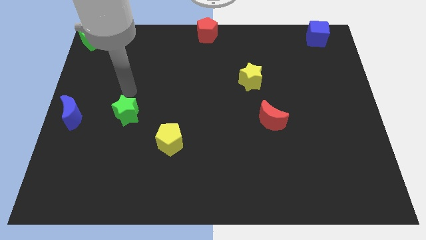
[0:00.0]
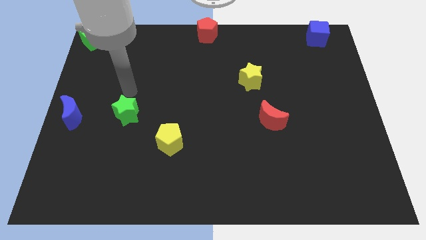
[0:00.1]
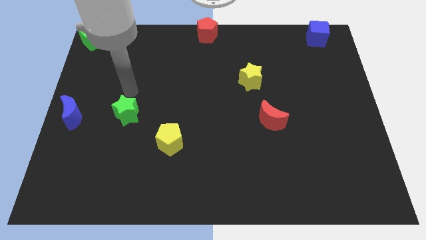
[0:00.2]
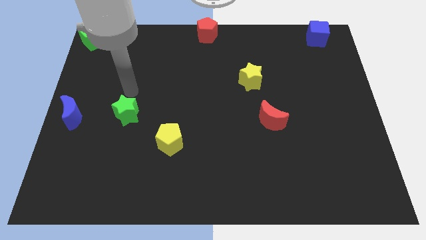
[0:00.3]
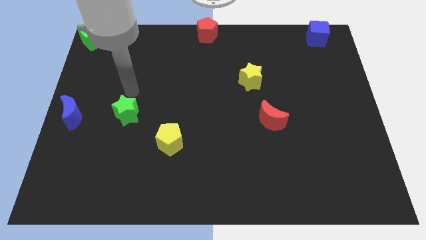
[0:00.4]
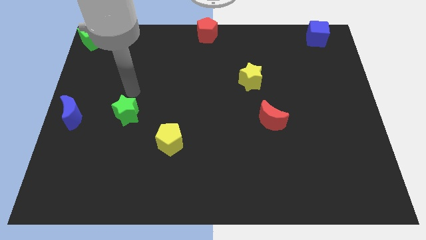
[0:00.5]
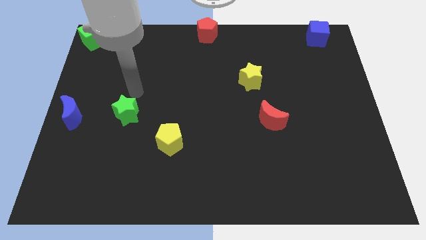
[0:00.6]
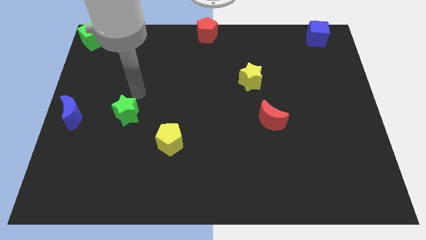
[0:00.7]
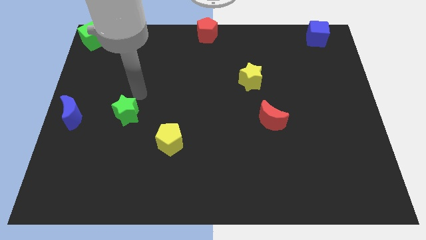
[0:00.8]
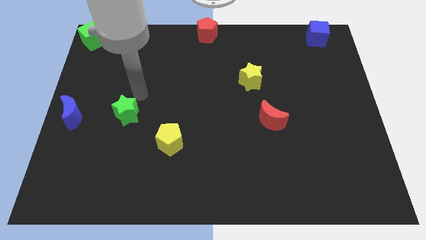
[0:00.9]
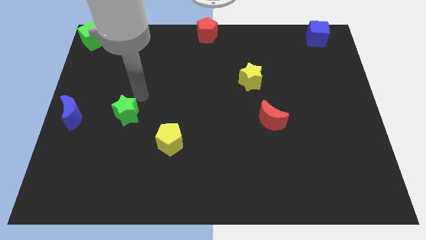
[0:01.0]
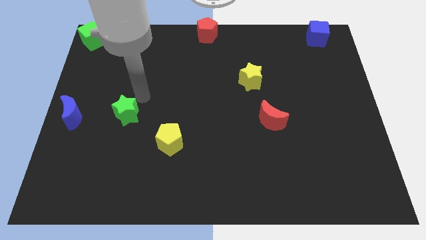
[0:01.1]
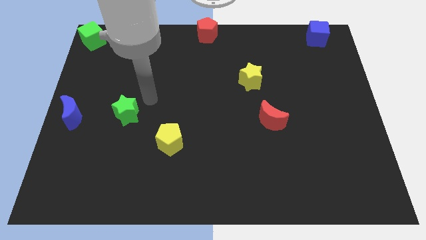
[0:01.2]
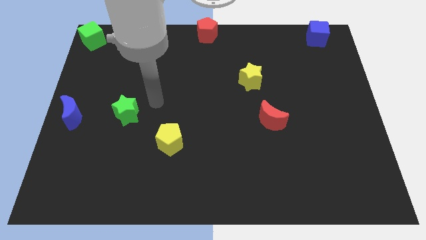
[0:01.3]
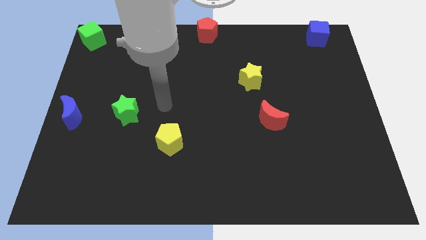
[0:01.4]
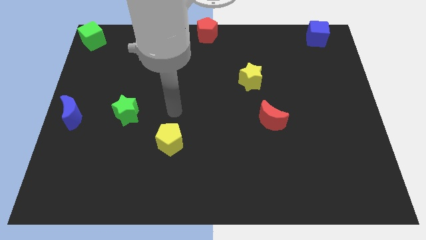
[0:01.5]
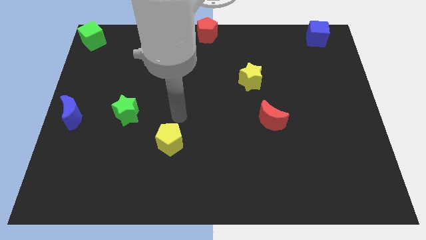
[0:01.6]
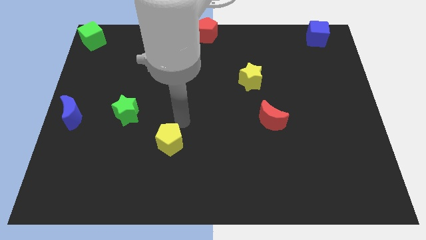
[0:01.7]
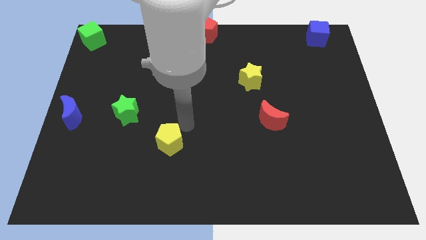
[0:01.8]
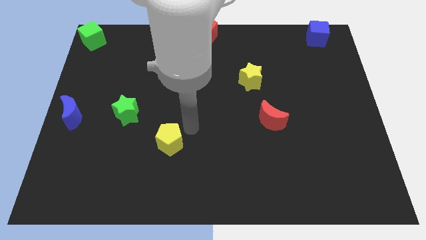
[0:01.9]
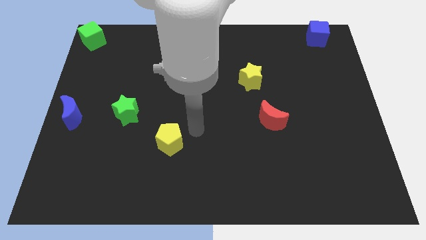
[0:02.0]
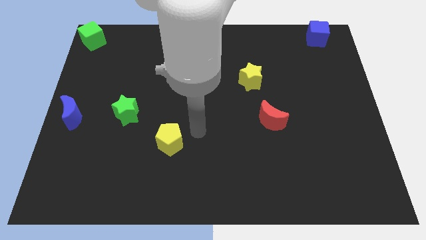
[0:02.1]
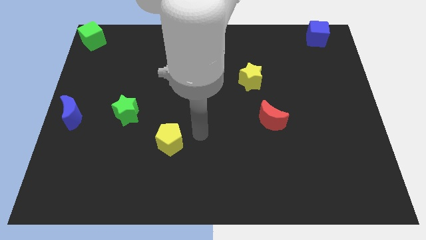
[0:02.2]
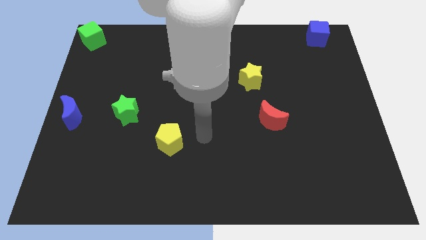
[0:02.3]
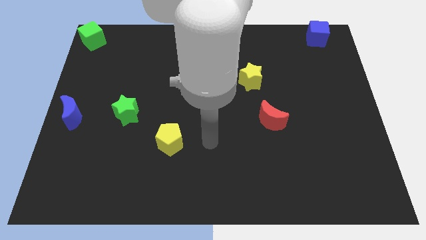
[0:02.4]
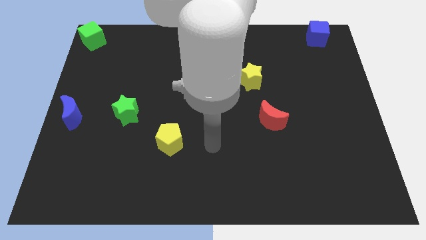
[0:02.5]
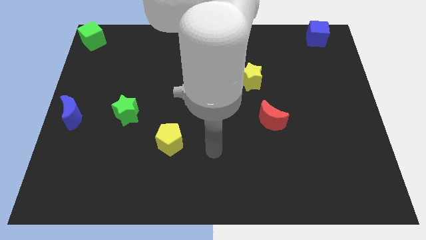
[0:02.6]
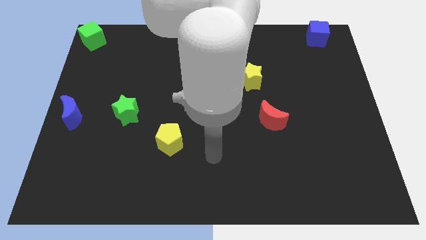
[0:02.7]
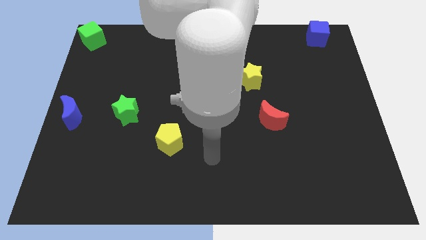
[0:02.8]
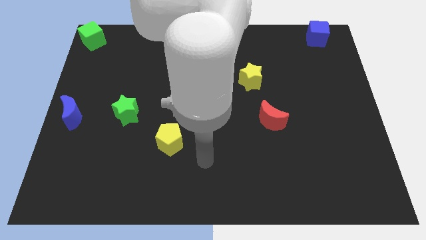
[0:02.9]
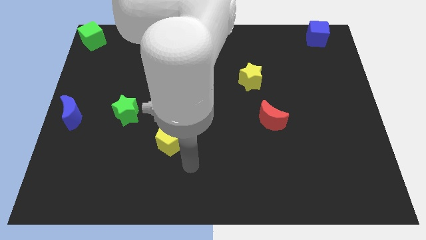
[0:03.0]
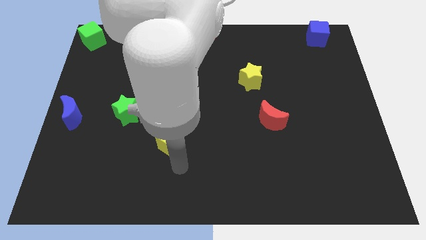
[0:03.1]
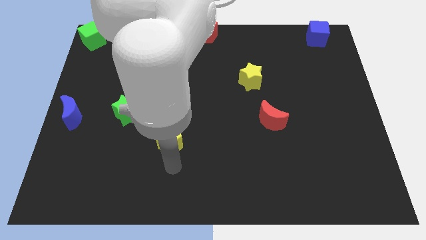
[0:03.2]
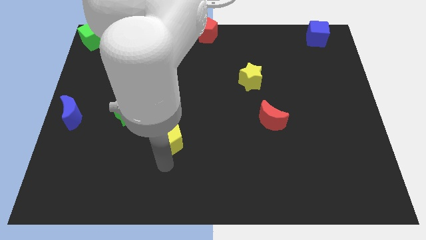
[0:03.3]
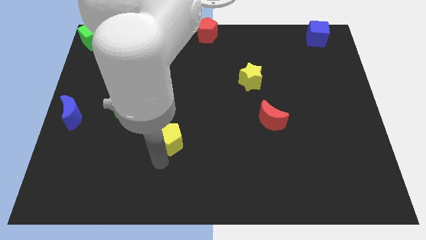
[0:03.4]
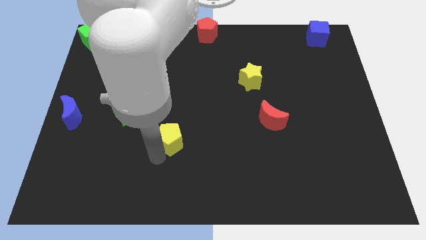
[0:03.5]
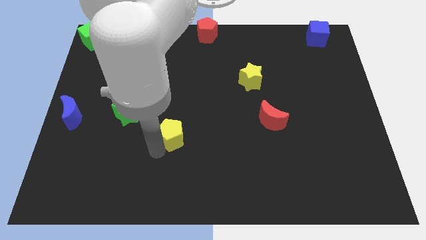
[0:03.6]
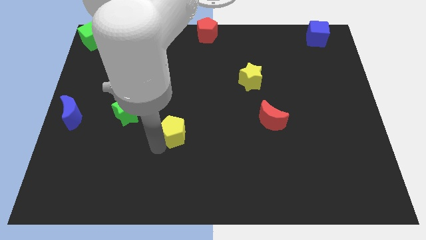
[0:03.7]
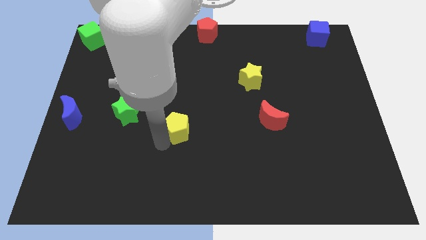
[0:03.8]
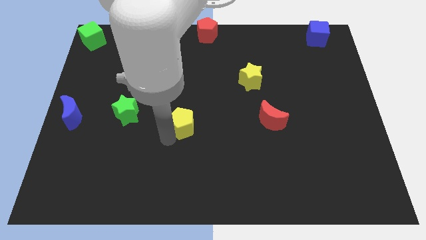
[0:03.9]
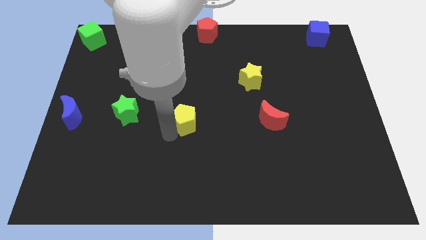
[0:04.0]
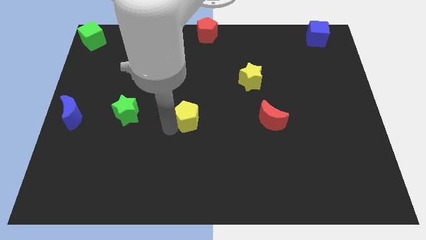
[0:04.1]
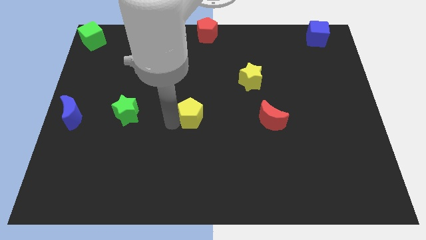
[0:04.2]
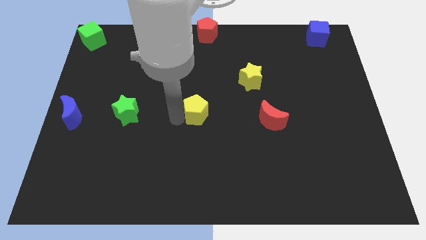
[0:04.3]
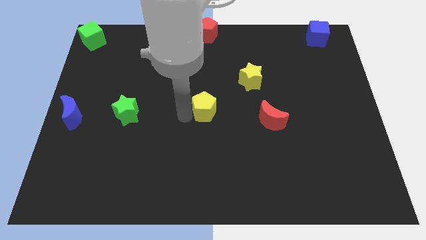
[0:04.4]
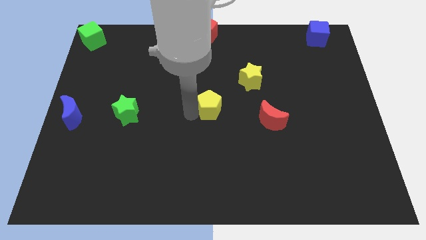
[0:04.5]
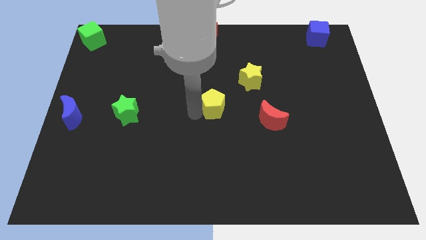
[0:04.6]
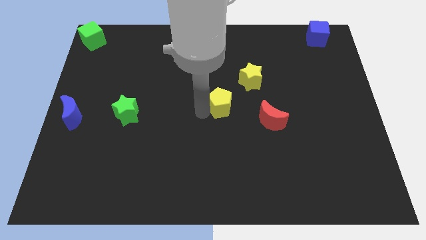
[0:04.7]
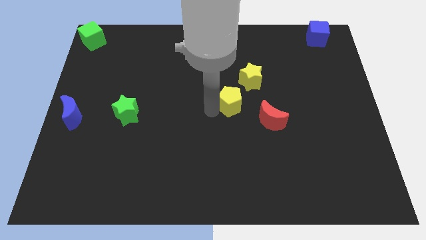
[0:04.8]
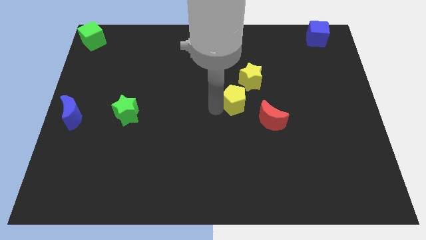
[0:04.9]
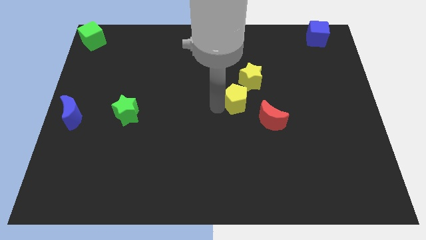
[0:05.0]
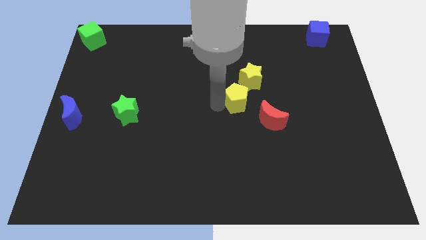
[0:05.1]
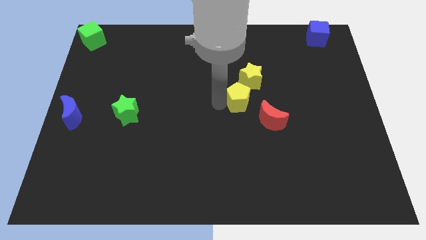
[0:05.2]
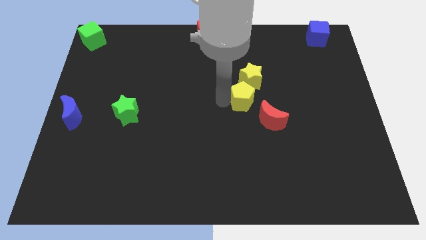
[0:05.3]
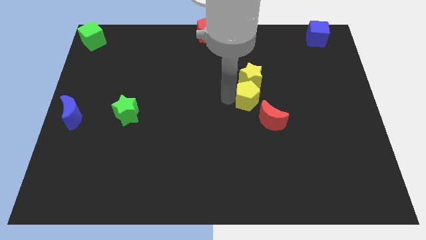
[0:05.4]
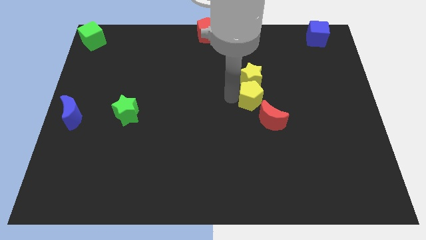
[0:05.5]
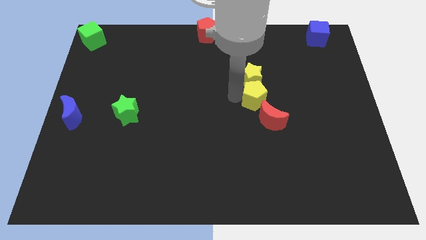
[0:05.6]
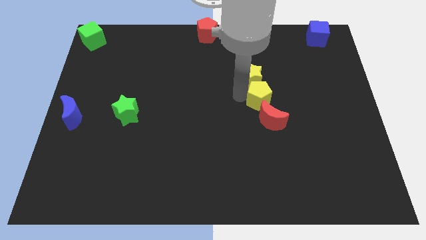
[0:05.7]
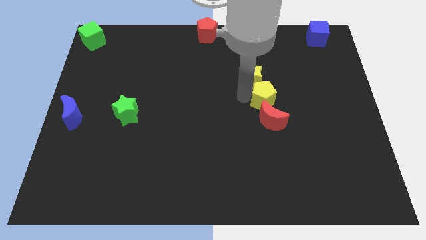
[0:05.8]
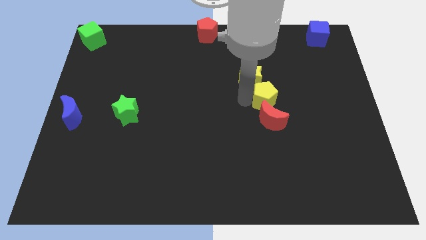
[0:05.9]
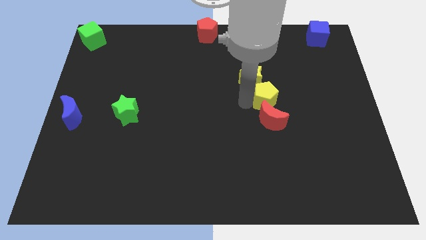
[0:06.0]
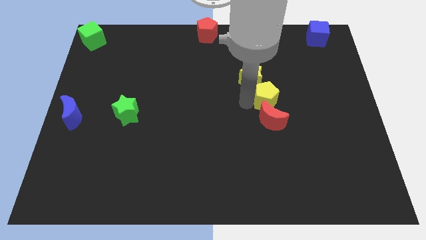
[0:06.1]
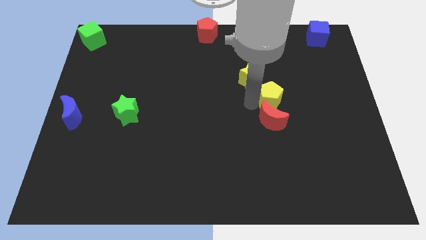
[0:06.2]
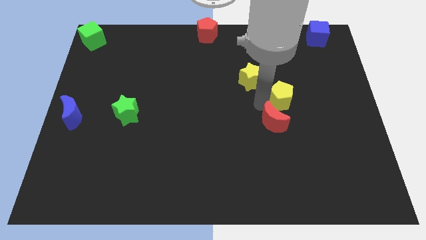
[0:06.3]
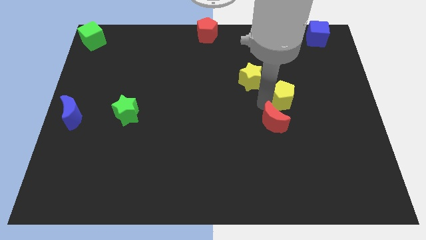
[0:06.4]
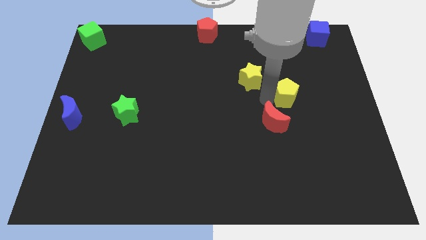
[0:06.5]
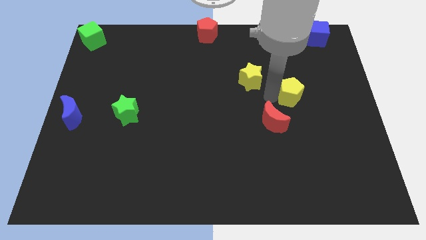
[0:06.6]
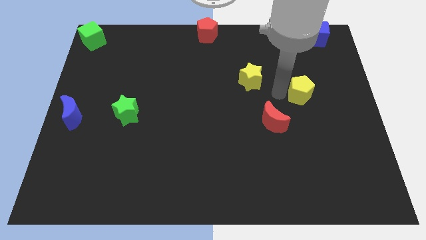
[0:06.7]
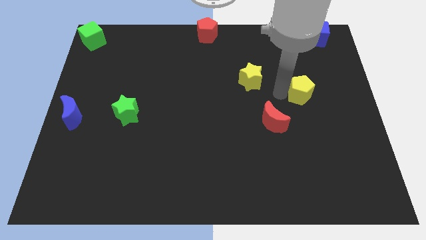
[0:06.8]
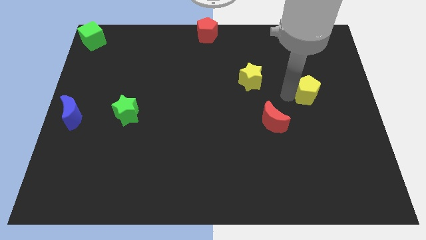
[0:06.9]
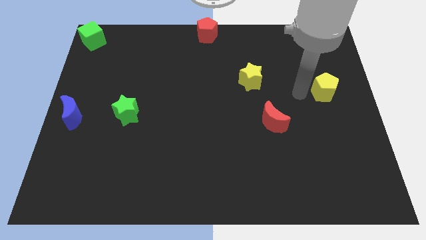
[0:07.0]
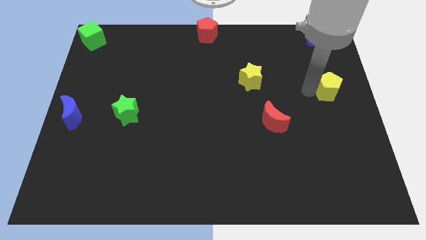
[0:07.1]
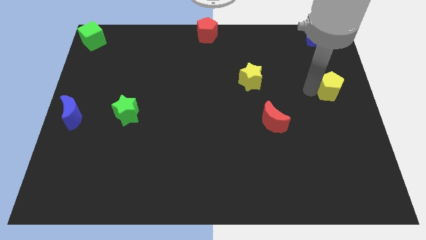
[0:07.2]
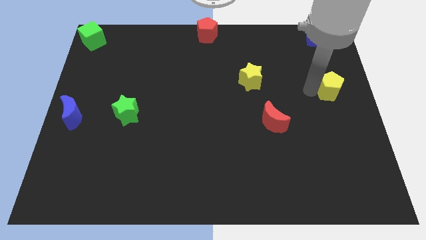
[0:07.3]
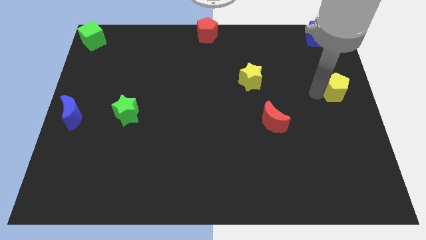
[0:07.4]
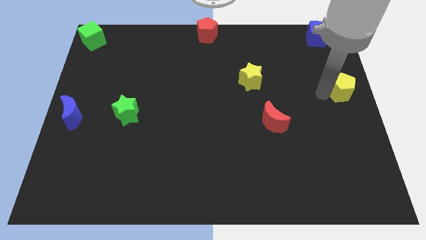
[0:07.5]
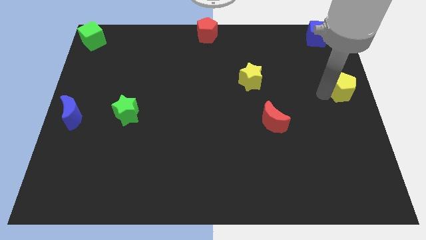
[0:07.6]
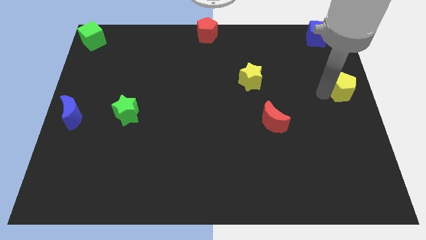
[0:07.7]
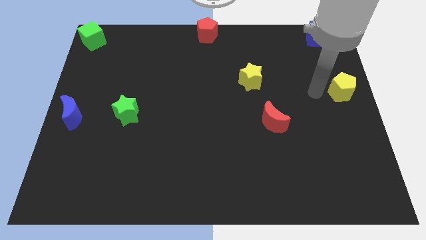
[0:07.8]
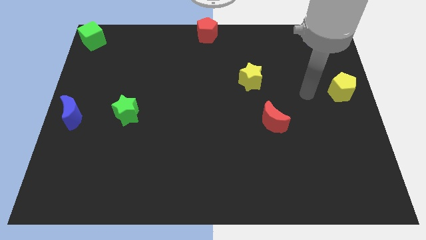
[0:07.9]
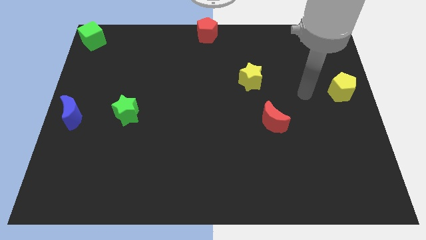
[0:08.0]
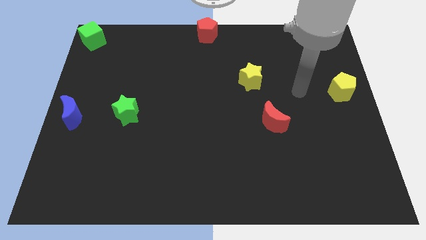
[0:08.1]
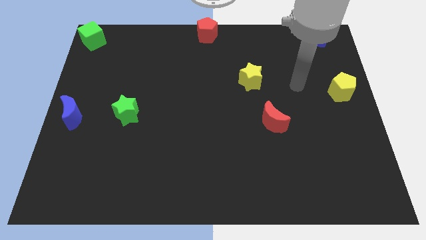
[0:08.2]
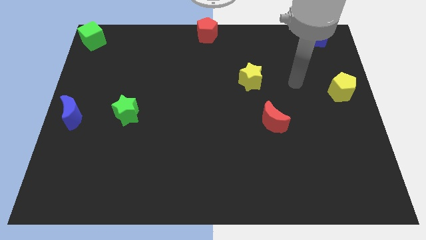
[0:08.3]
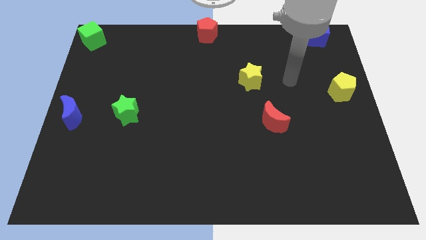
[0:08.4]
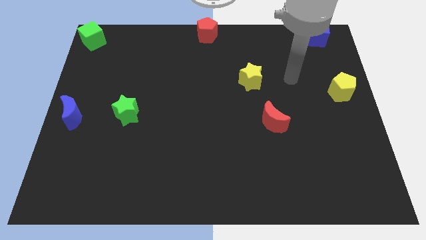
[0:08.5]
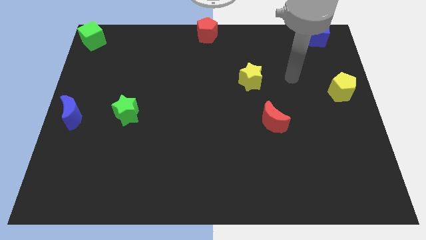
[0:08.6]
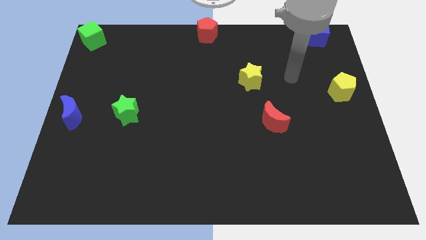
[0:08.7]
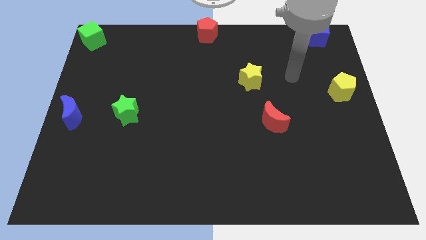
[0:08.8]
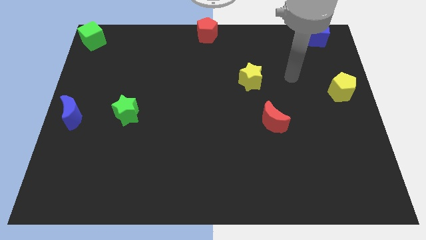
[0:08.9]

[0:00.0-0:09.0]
move the yellow pentagon to the right center of the board
